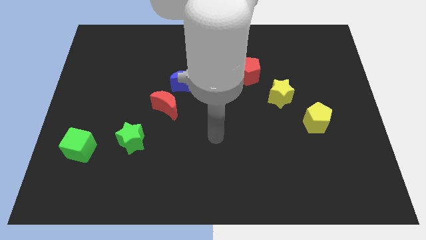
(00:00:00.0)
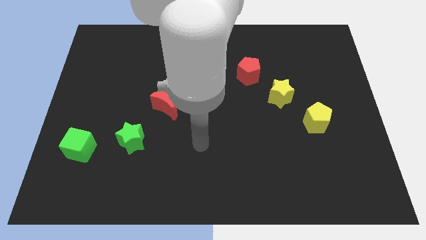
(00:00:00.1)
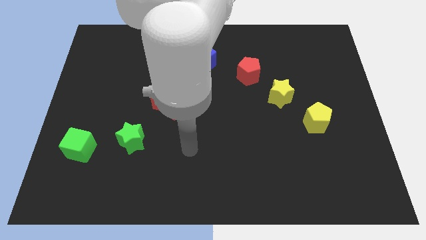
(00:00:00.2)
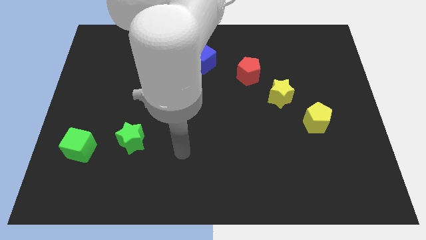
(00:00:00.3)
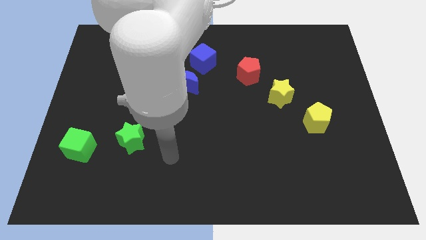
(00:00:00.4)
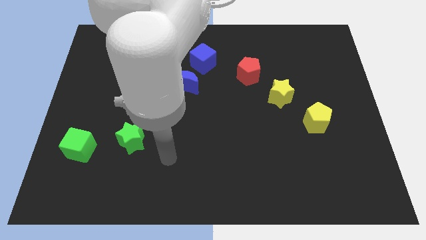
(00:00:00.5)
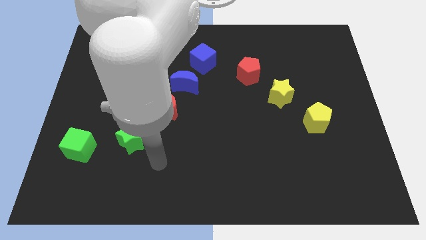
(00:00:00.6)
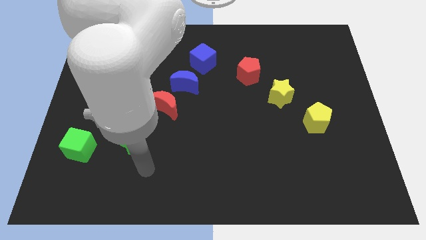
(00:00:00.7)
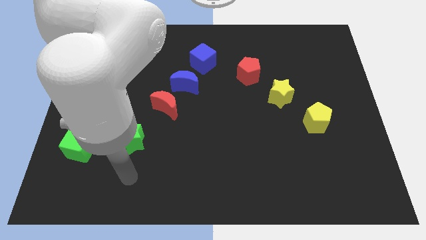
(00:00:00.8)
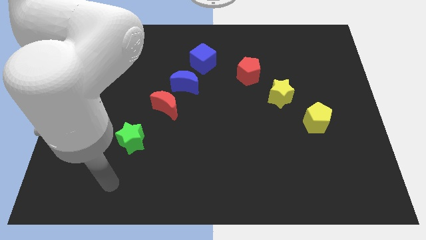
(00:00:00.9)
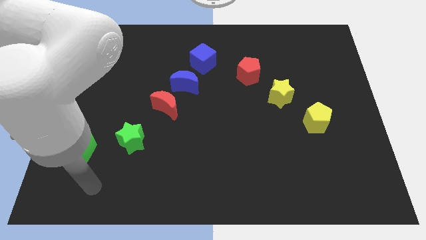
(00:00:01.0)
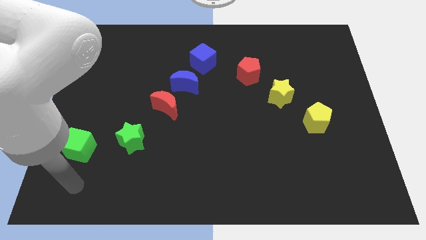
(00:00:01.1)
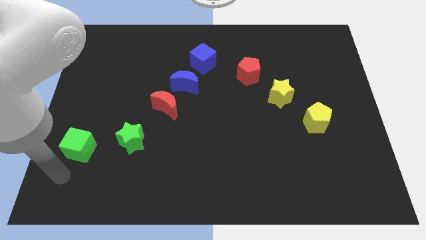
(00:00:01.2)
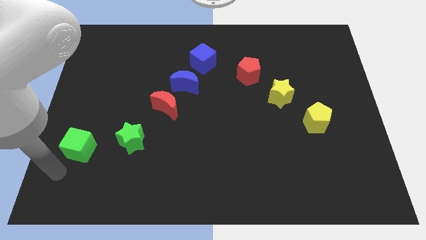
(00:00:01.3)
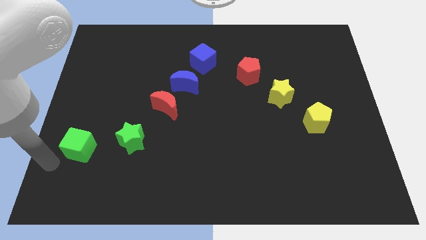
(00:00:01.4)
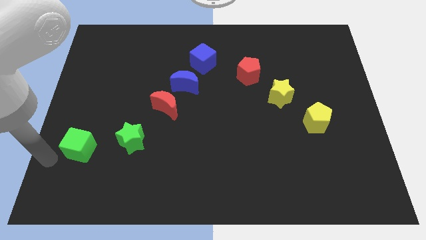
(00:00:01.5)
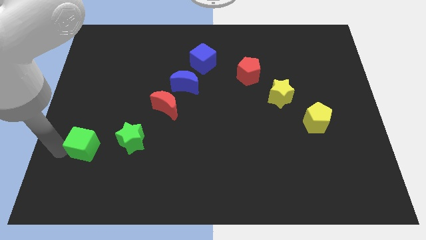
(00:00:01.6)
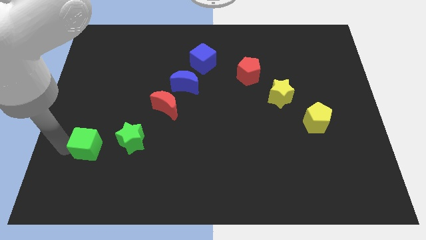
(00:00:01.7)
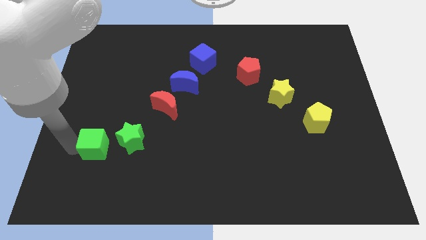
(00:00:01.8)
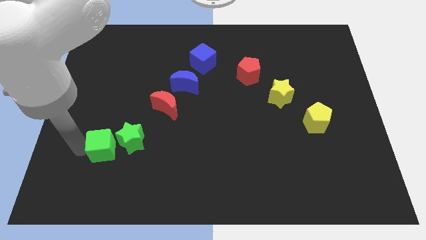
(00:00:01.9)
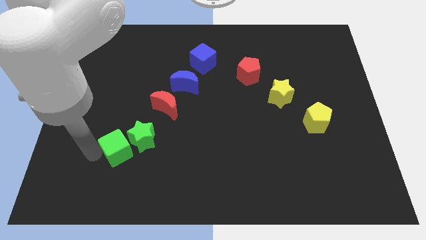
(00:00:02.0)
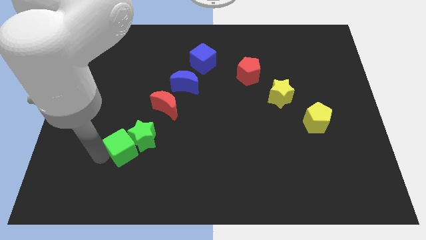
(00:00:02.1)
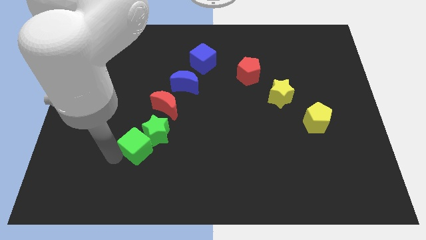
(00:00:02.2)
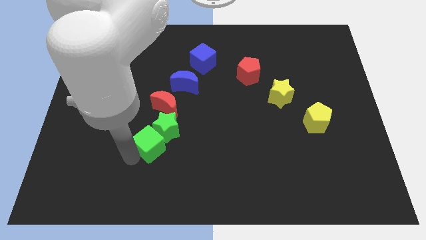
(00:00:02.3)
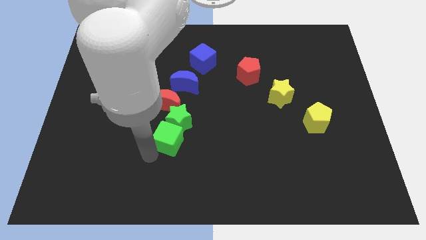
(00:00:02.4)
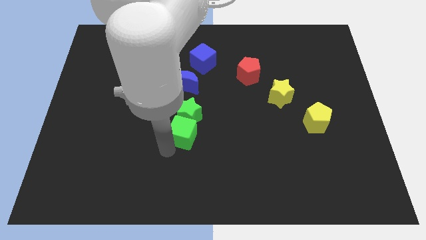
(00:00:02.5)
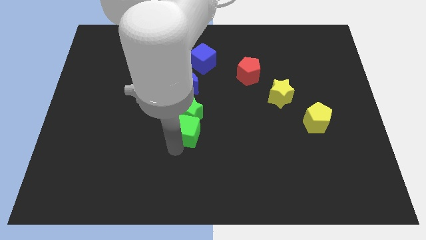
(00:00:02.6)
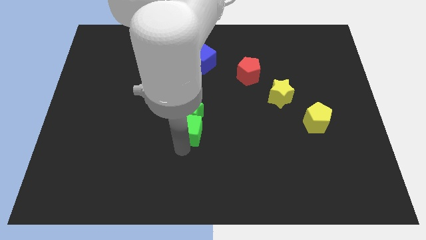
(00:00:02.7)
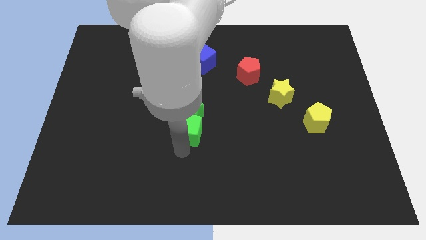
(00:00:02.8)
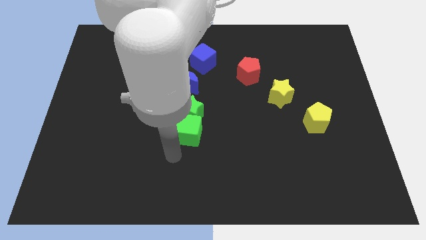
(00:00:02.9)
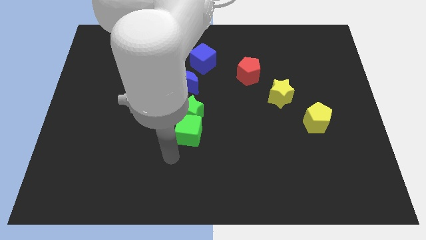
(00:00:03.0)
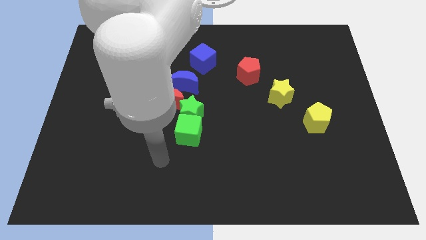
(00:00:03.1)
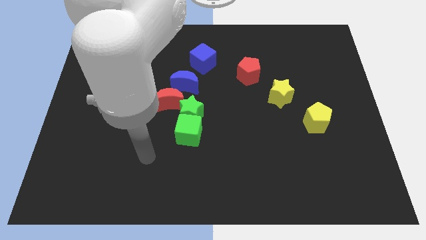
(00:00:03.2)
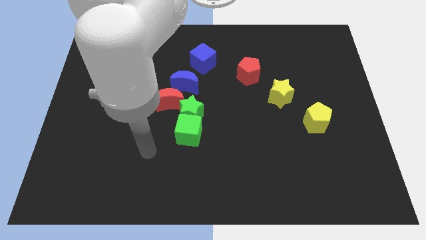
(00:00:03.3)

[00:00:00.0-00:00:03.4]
move the green cube along the green star towards the bottom right to the red crescent

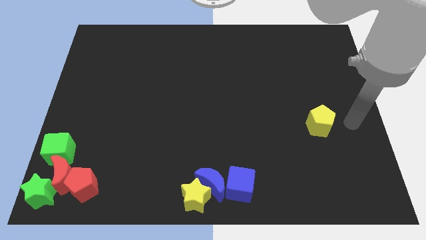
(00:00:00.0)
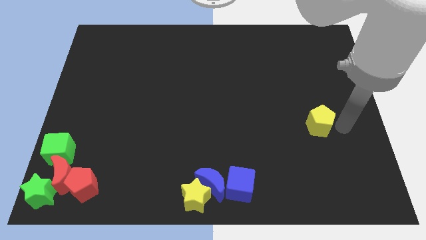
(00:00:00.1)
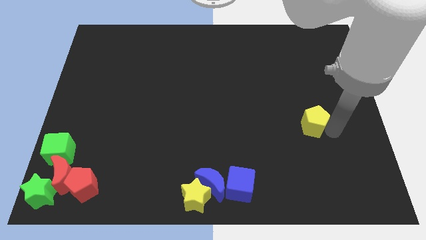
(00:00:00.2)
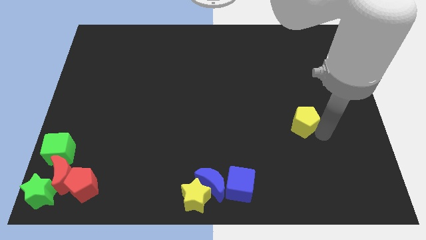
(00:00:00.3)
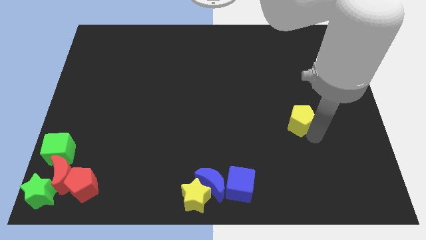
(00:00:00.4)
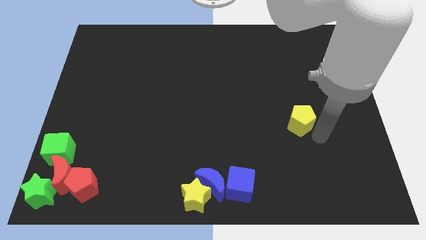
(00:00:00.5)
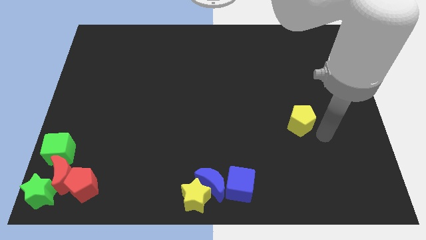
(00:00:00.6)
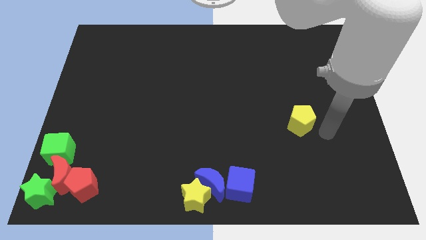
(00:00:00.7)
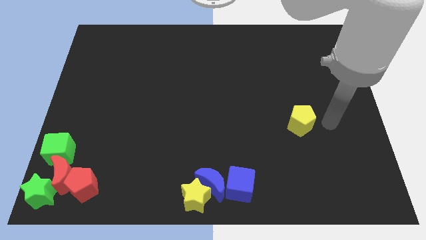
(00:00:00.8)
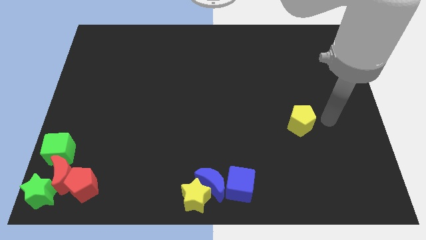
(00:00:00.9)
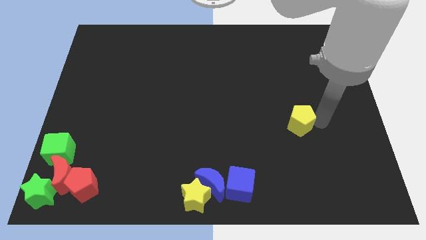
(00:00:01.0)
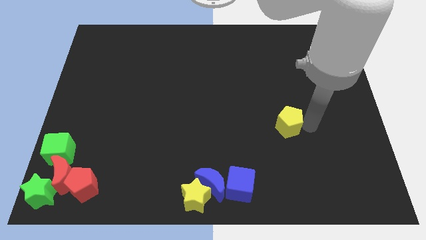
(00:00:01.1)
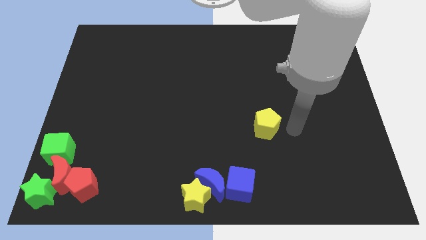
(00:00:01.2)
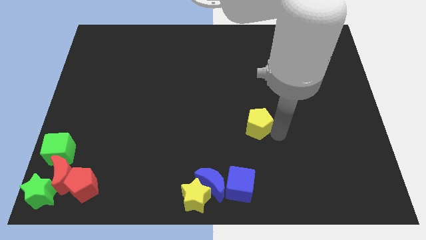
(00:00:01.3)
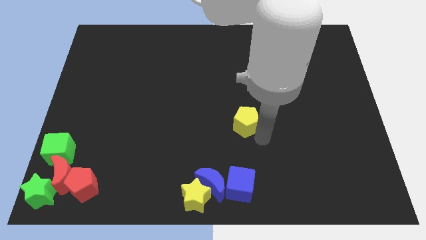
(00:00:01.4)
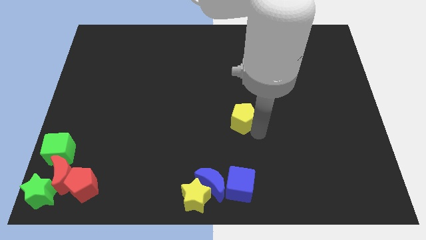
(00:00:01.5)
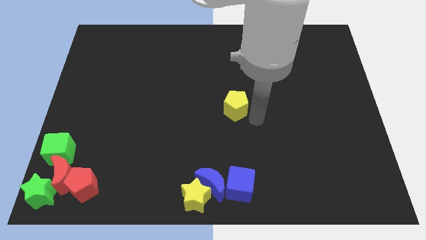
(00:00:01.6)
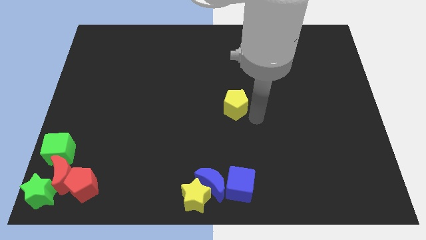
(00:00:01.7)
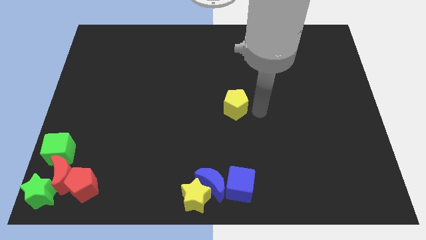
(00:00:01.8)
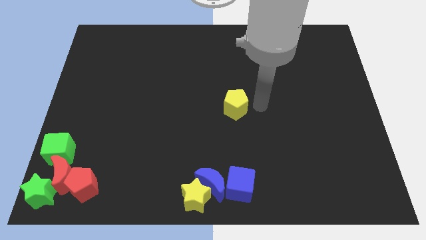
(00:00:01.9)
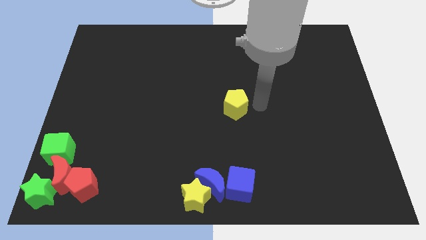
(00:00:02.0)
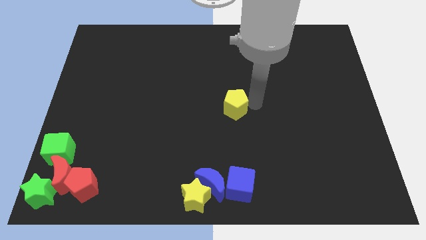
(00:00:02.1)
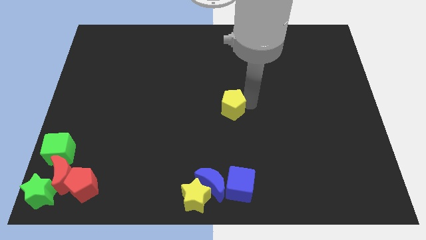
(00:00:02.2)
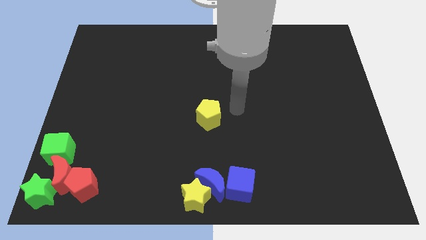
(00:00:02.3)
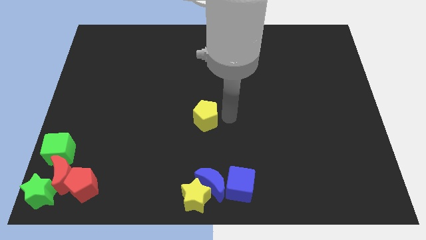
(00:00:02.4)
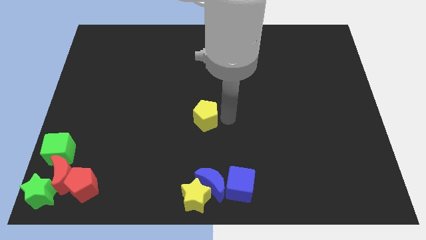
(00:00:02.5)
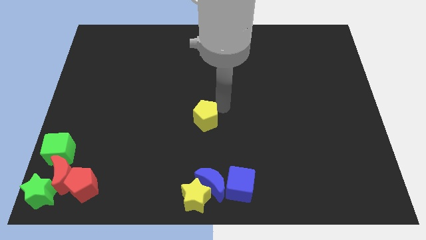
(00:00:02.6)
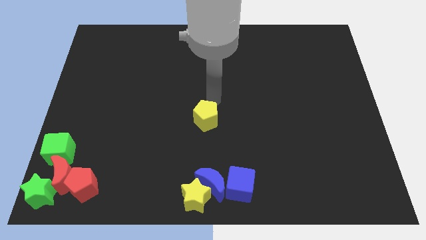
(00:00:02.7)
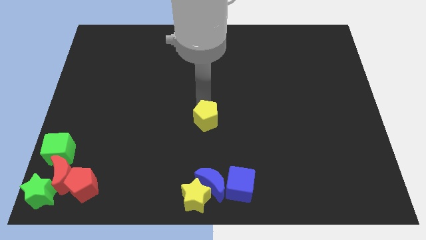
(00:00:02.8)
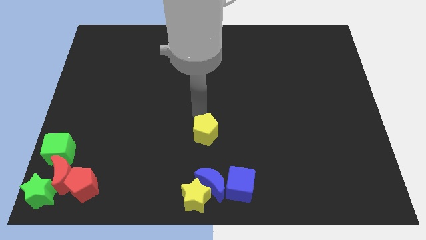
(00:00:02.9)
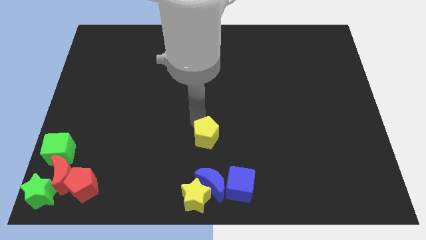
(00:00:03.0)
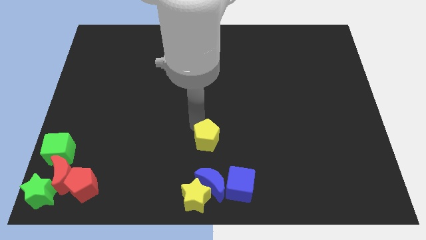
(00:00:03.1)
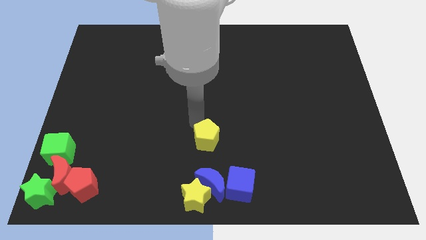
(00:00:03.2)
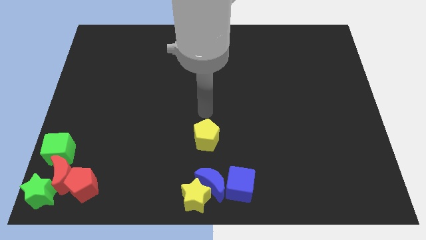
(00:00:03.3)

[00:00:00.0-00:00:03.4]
push yellow pentagon above blue crescent

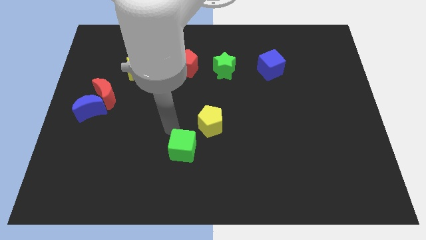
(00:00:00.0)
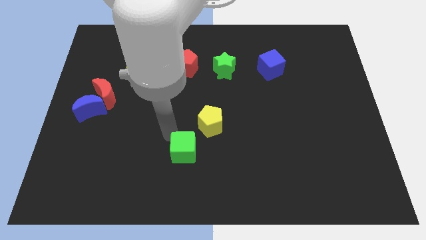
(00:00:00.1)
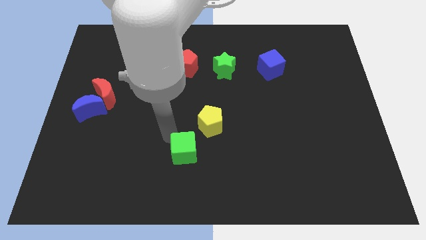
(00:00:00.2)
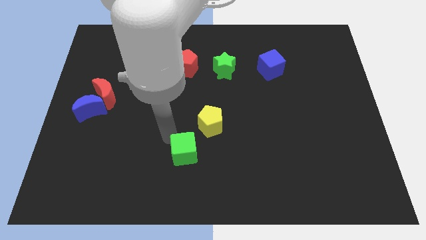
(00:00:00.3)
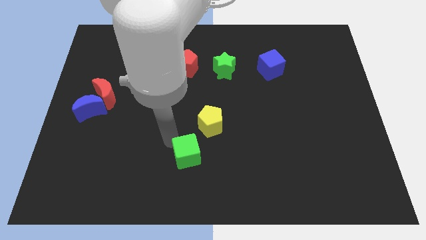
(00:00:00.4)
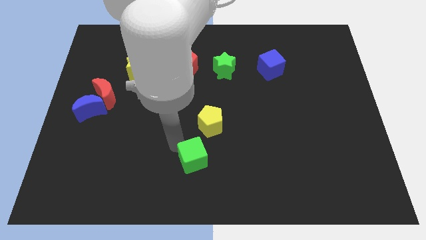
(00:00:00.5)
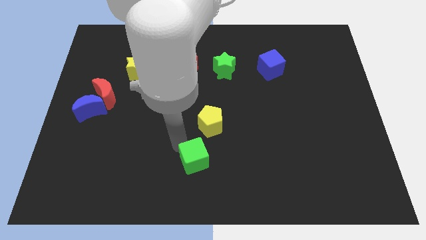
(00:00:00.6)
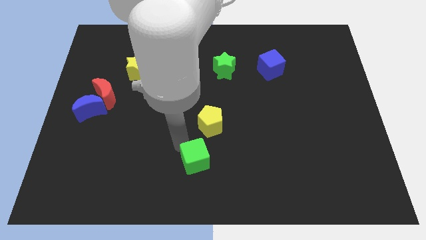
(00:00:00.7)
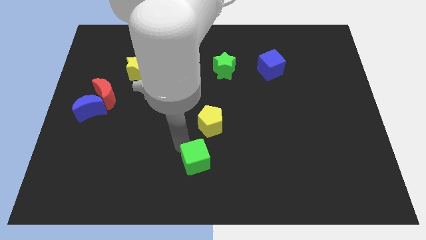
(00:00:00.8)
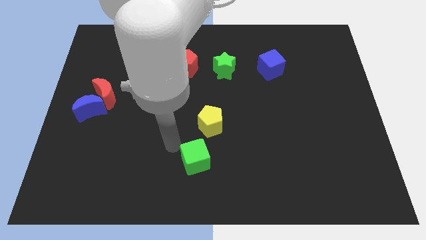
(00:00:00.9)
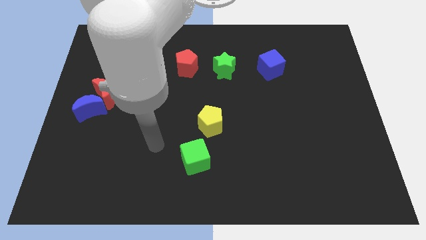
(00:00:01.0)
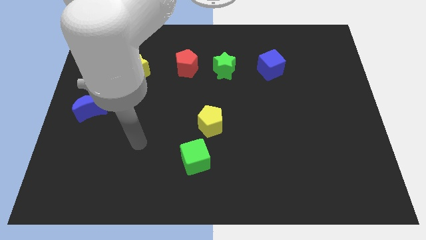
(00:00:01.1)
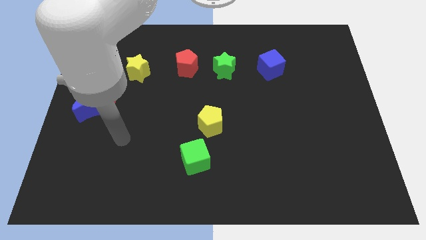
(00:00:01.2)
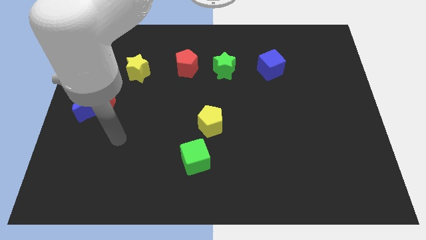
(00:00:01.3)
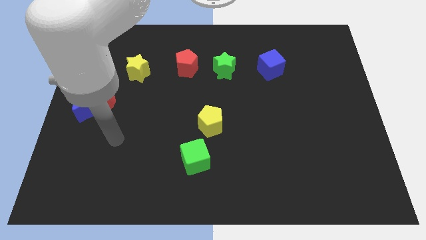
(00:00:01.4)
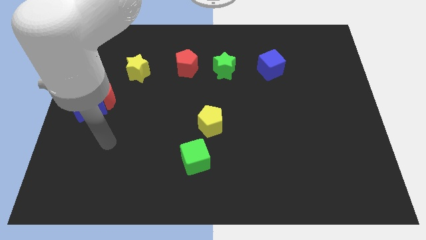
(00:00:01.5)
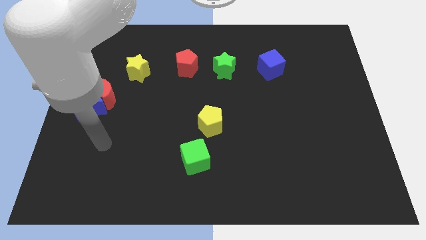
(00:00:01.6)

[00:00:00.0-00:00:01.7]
place green cube below yellow pentagon

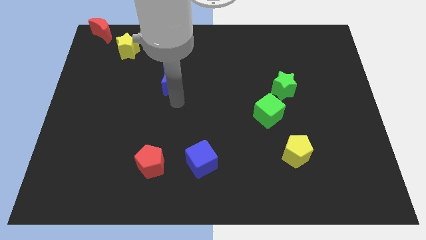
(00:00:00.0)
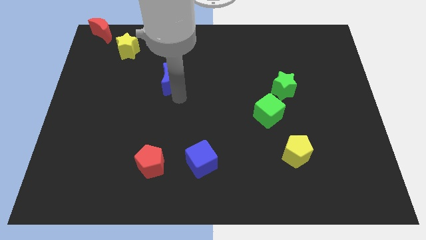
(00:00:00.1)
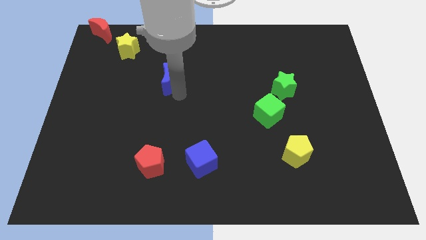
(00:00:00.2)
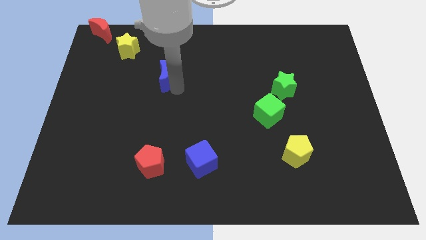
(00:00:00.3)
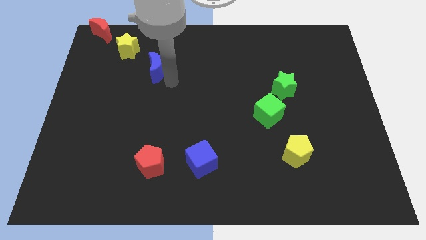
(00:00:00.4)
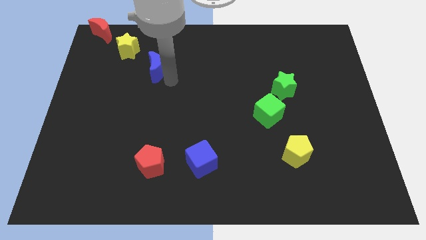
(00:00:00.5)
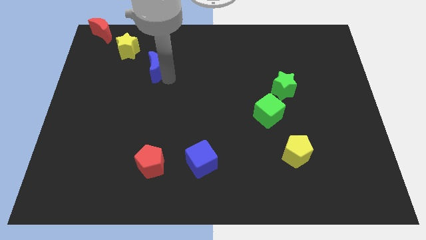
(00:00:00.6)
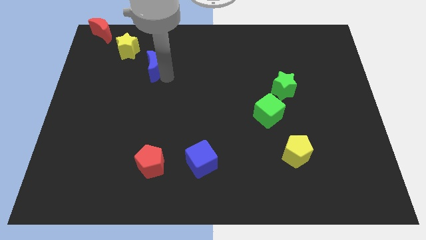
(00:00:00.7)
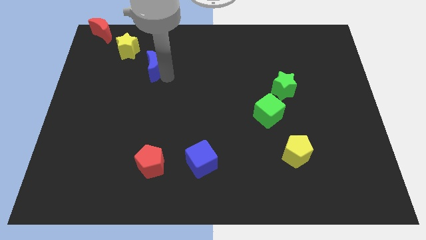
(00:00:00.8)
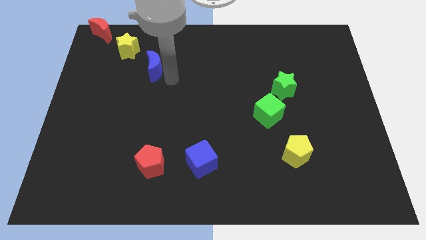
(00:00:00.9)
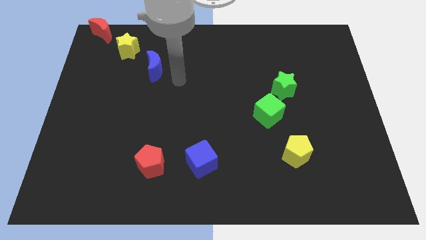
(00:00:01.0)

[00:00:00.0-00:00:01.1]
place blue crescent below yellow star
